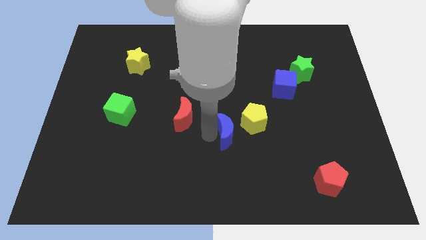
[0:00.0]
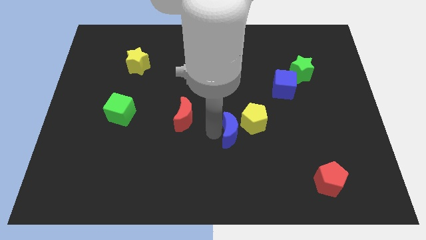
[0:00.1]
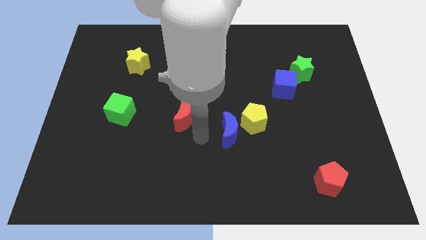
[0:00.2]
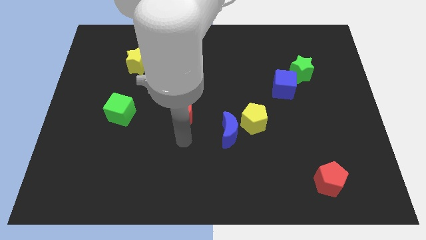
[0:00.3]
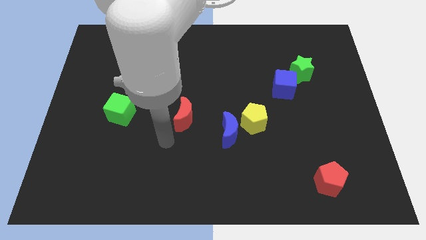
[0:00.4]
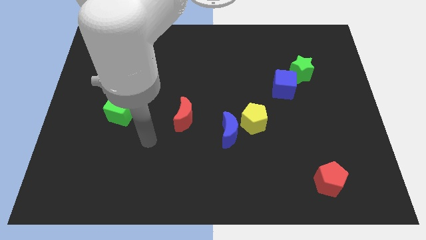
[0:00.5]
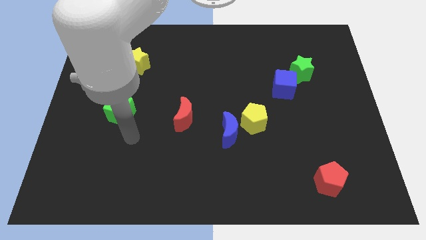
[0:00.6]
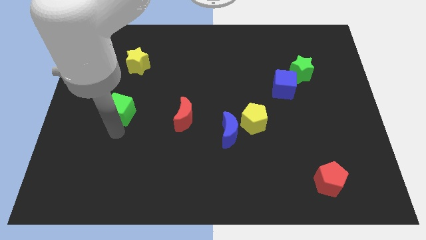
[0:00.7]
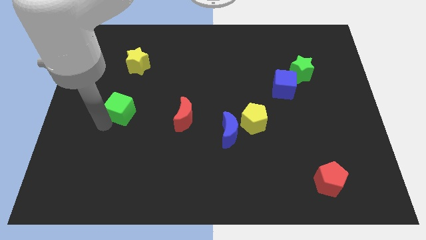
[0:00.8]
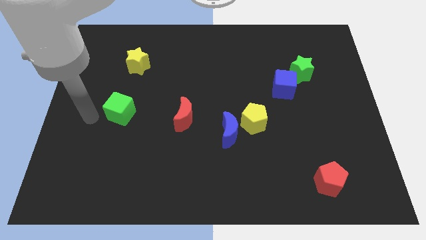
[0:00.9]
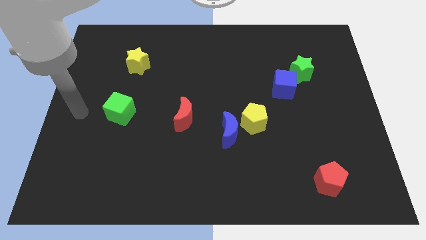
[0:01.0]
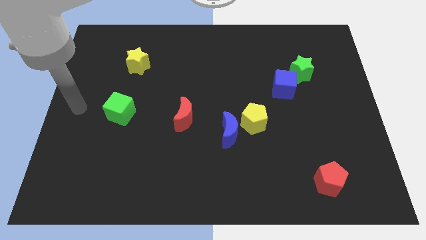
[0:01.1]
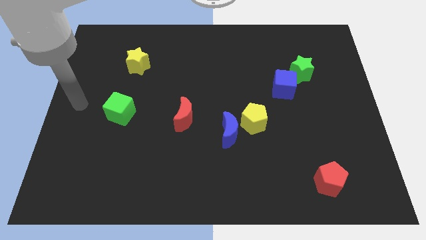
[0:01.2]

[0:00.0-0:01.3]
move your arm towards the center left side of the board

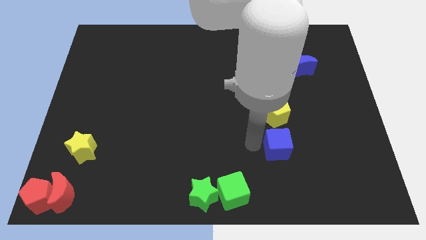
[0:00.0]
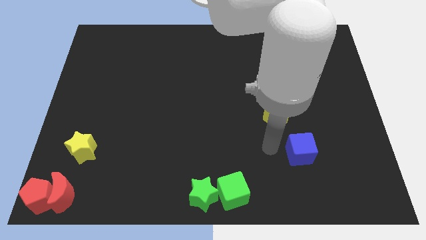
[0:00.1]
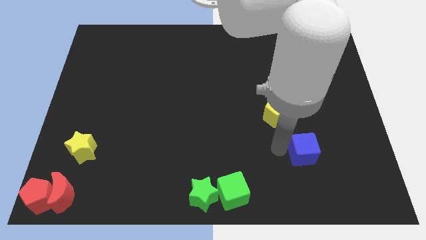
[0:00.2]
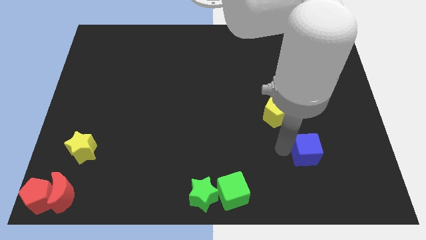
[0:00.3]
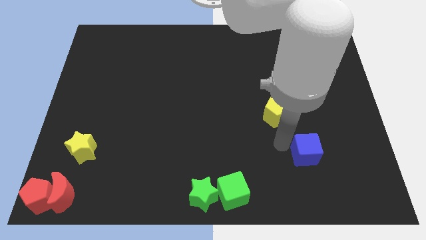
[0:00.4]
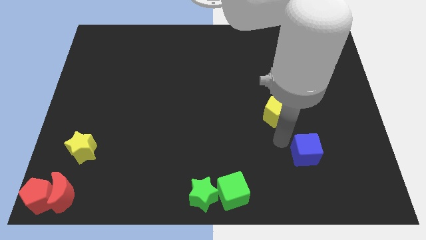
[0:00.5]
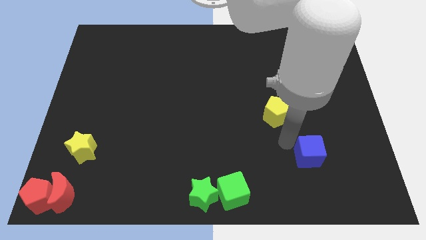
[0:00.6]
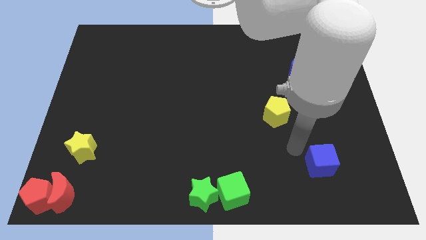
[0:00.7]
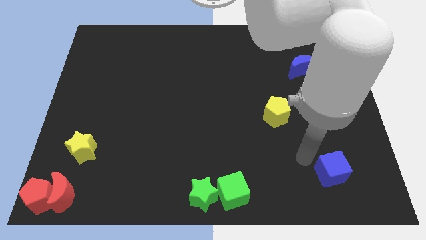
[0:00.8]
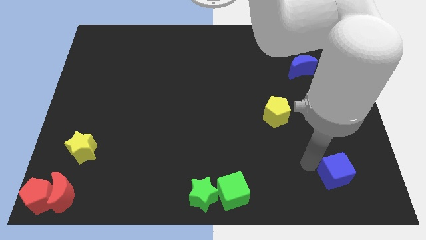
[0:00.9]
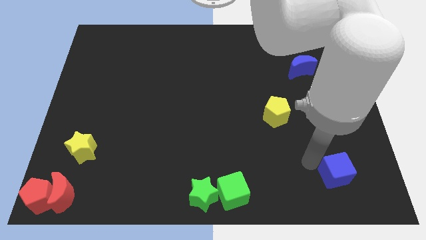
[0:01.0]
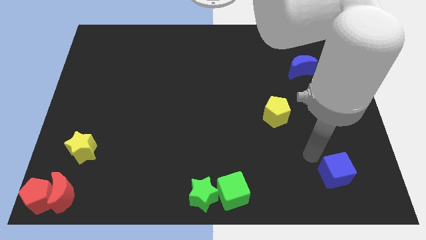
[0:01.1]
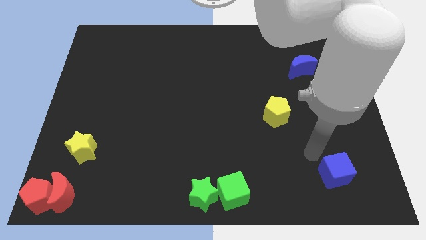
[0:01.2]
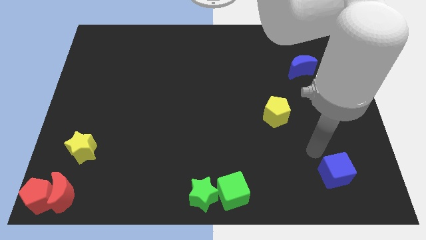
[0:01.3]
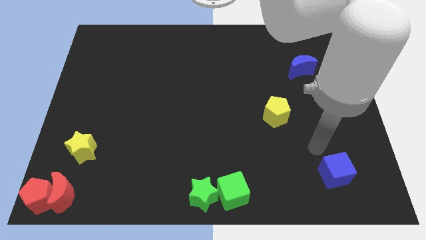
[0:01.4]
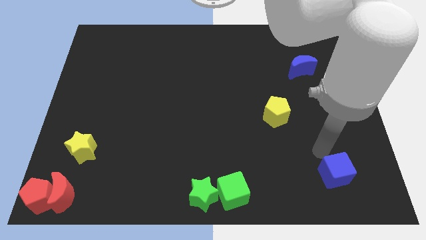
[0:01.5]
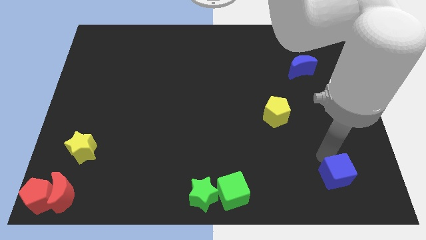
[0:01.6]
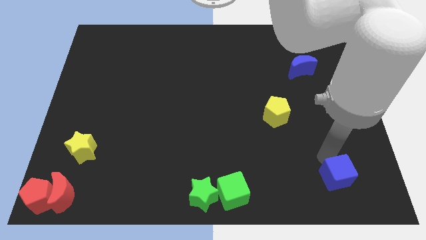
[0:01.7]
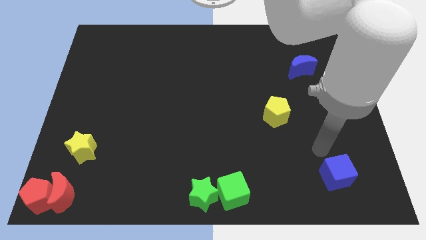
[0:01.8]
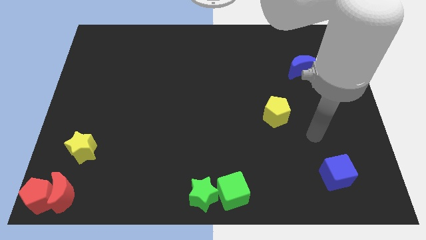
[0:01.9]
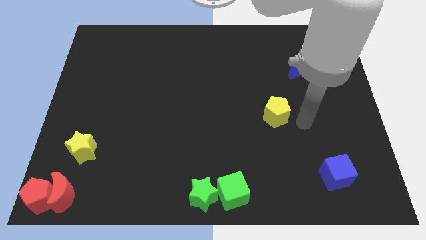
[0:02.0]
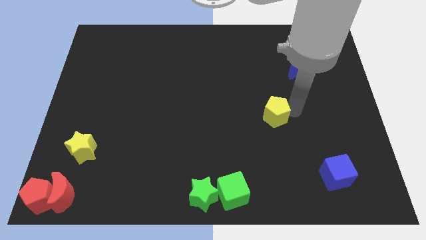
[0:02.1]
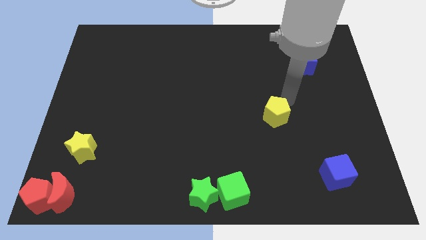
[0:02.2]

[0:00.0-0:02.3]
push blue cube towards bottom of the board

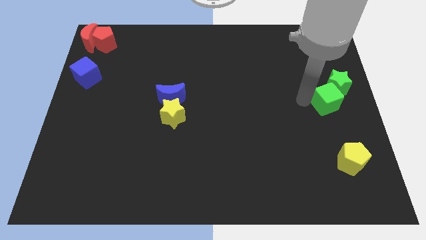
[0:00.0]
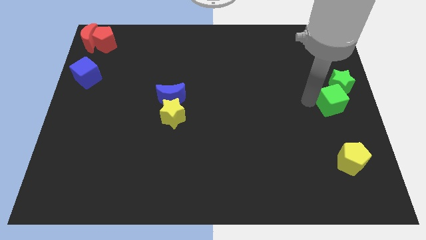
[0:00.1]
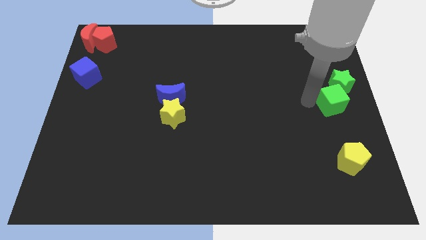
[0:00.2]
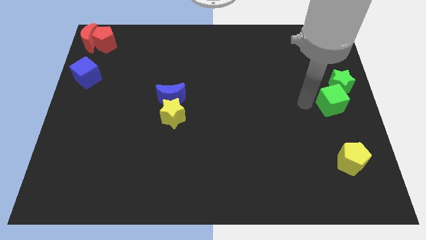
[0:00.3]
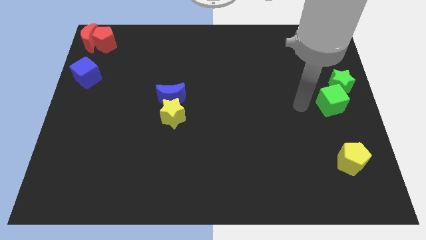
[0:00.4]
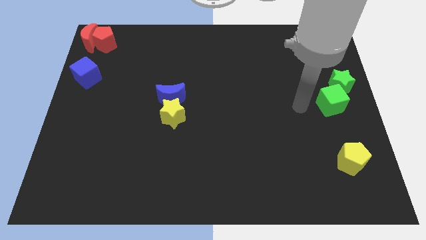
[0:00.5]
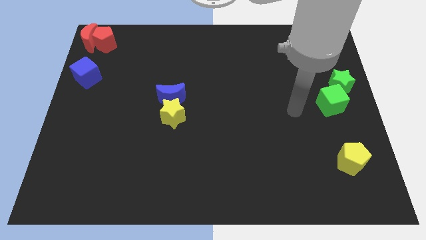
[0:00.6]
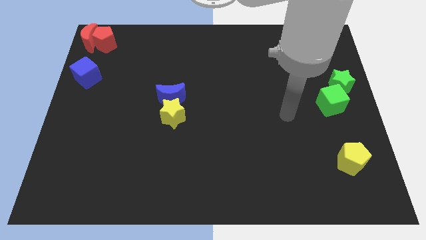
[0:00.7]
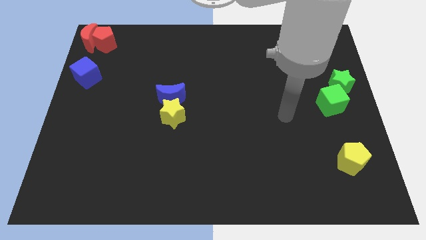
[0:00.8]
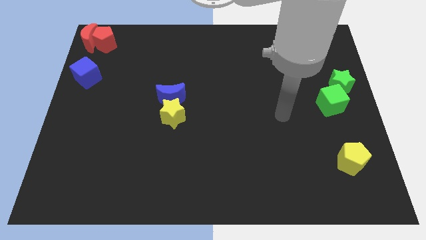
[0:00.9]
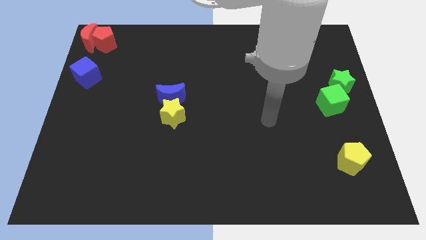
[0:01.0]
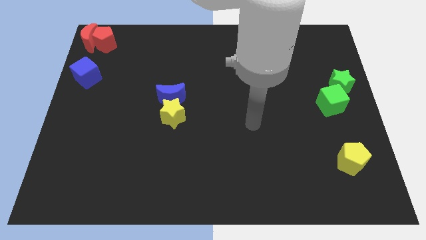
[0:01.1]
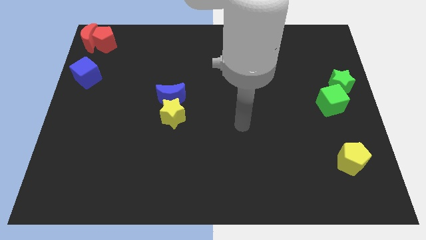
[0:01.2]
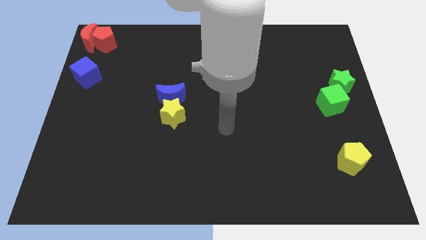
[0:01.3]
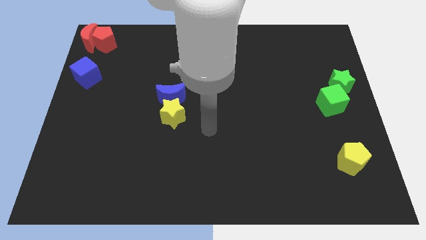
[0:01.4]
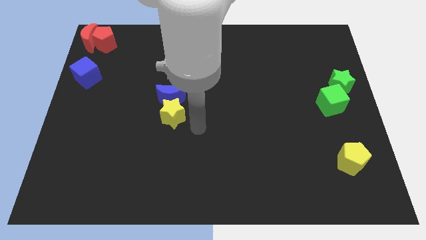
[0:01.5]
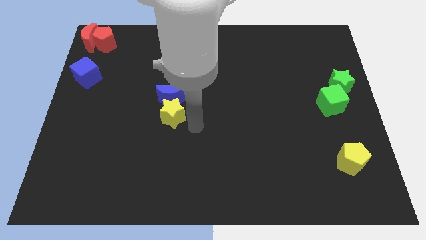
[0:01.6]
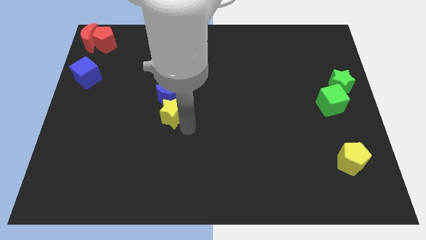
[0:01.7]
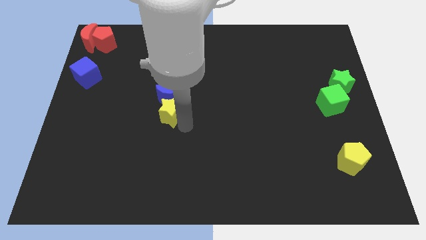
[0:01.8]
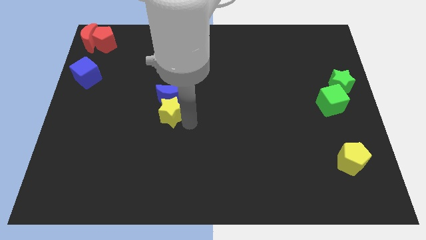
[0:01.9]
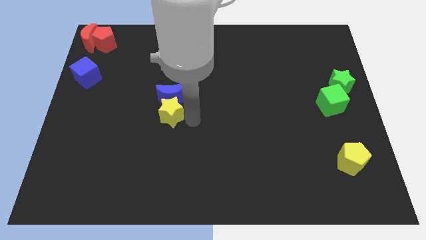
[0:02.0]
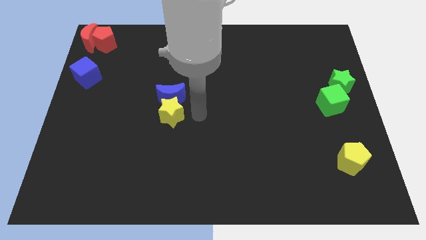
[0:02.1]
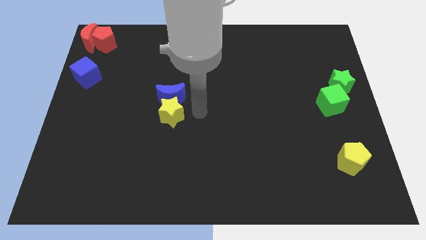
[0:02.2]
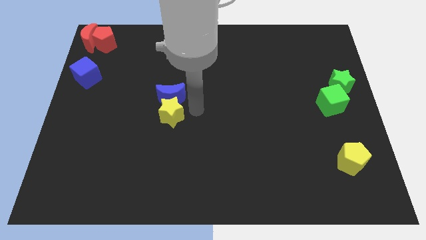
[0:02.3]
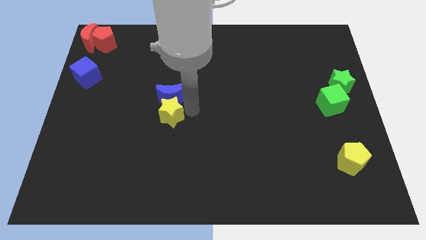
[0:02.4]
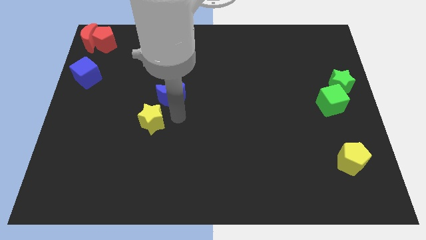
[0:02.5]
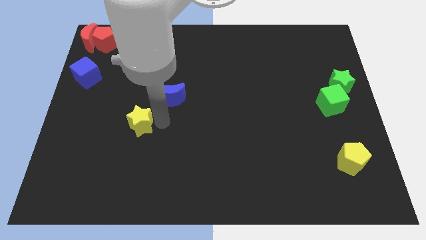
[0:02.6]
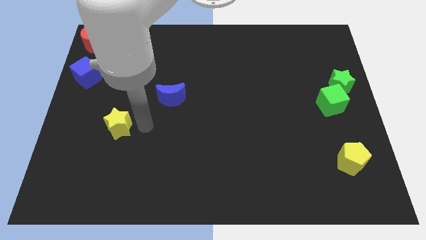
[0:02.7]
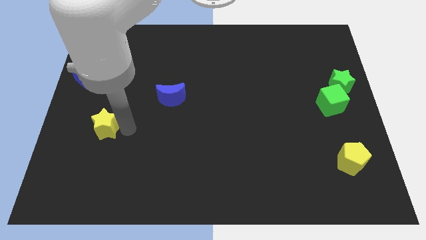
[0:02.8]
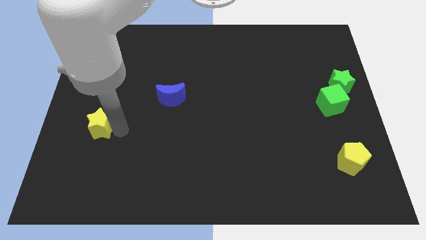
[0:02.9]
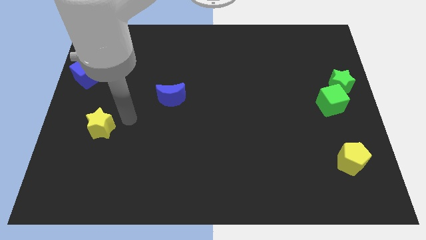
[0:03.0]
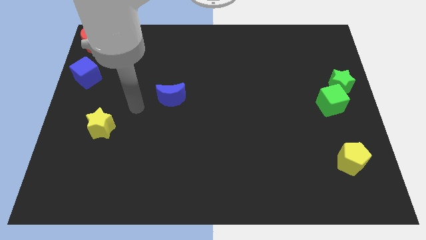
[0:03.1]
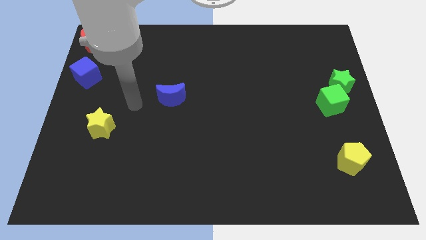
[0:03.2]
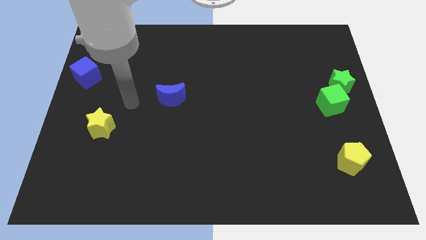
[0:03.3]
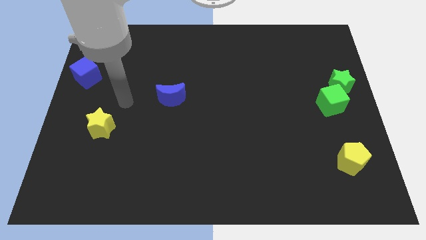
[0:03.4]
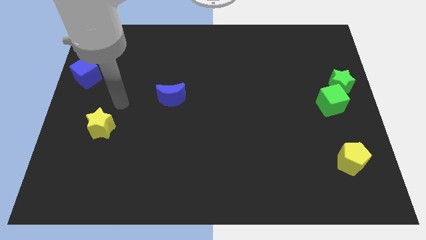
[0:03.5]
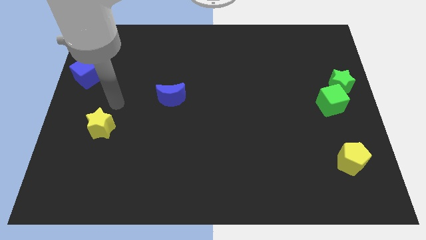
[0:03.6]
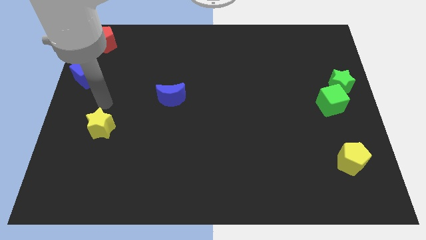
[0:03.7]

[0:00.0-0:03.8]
move the yellow star away from the blue moon

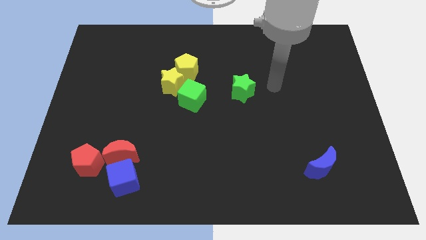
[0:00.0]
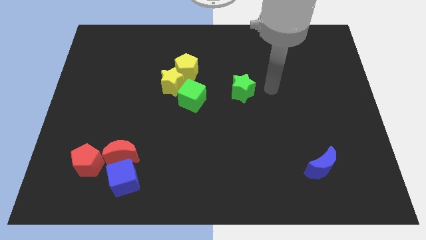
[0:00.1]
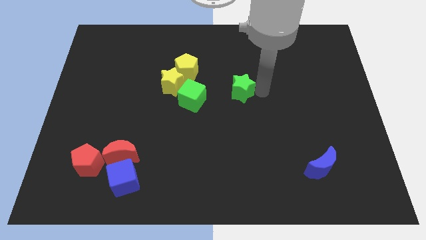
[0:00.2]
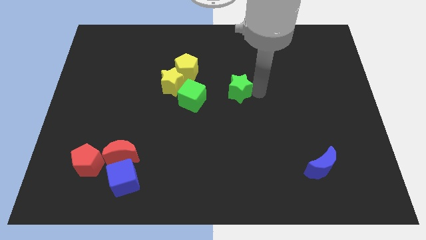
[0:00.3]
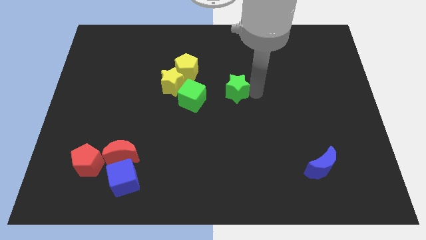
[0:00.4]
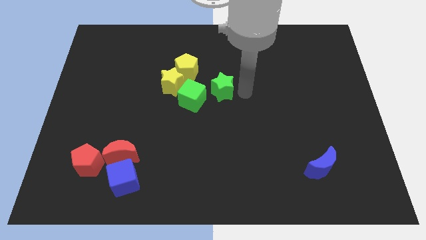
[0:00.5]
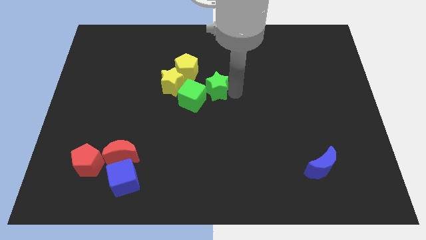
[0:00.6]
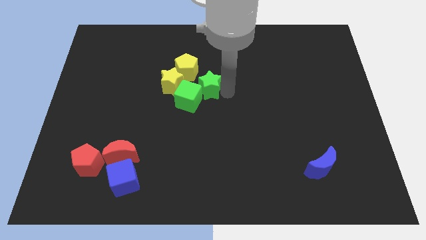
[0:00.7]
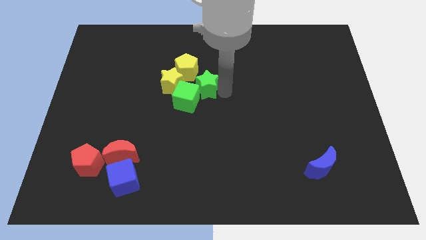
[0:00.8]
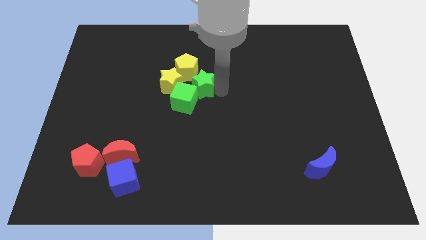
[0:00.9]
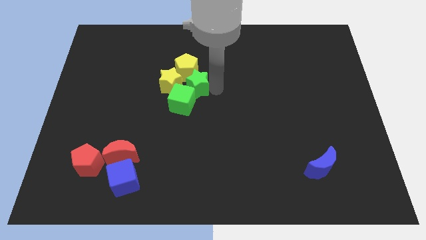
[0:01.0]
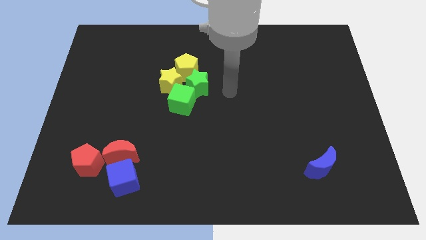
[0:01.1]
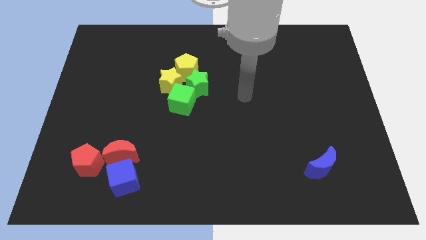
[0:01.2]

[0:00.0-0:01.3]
move green star into yellow star

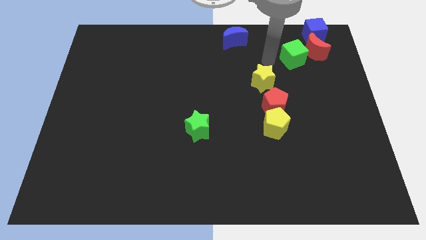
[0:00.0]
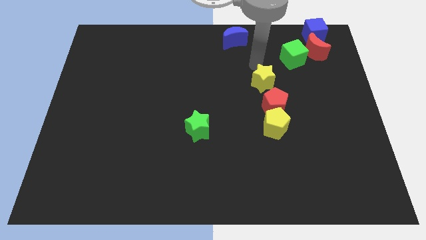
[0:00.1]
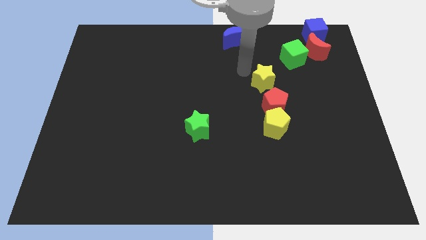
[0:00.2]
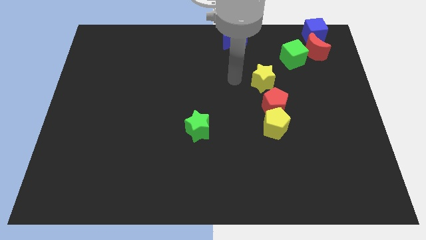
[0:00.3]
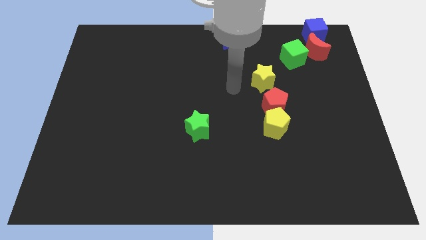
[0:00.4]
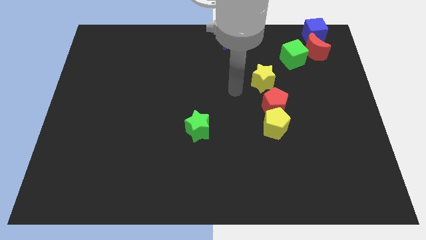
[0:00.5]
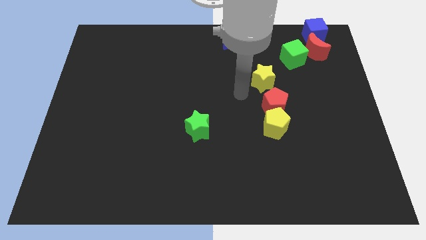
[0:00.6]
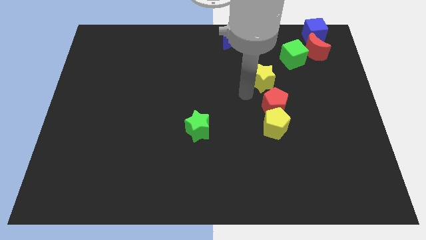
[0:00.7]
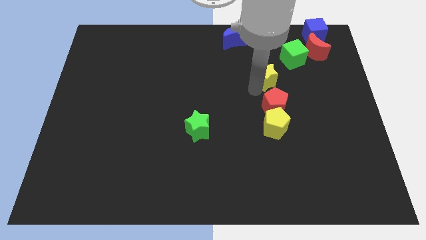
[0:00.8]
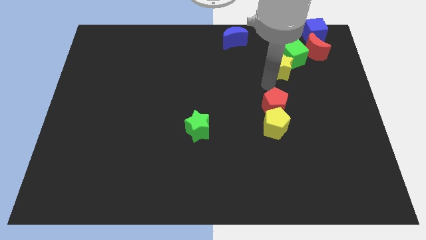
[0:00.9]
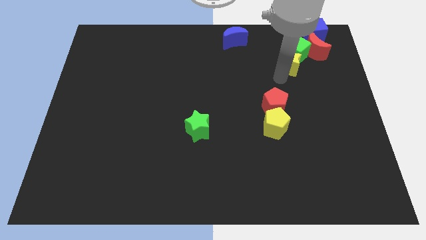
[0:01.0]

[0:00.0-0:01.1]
move the yellow star into the green cube
